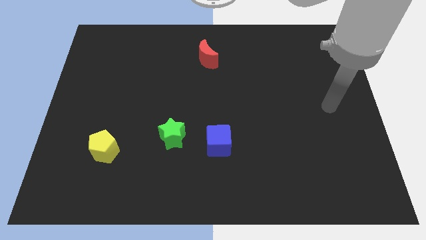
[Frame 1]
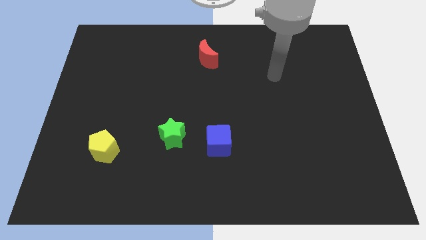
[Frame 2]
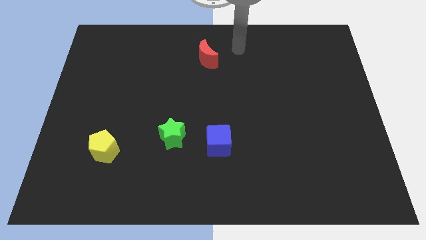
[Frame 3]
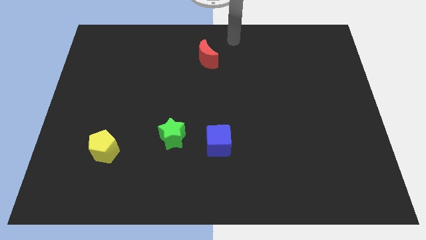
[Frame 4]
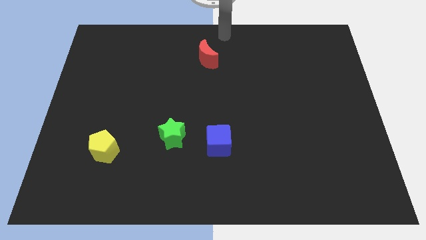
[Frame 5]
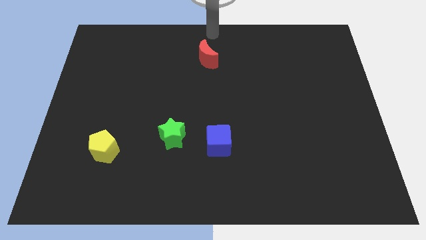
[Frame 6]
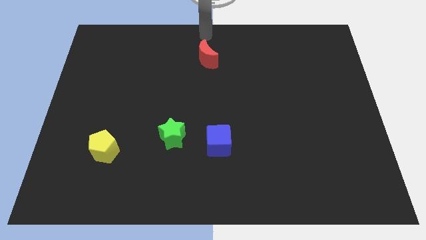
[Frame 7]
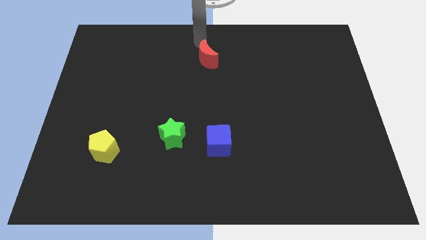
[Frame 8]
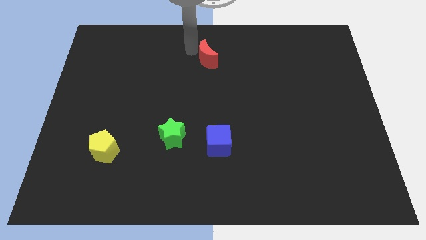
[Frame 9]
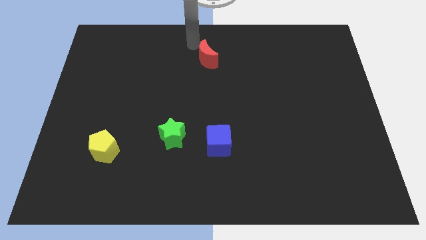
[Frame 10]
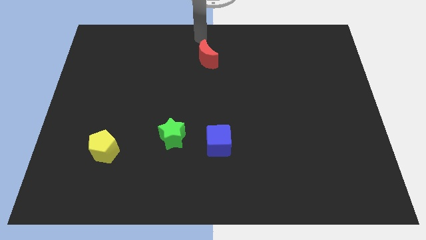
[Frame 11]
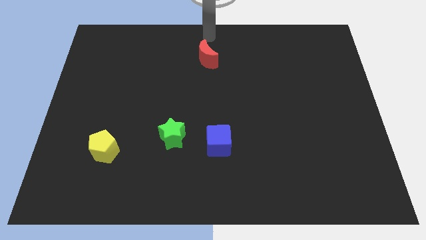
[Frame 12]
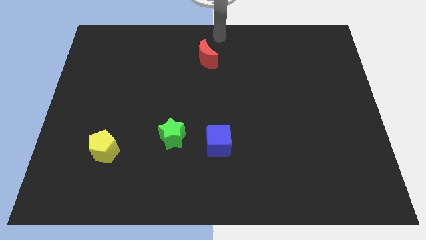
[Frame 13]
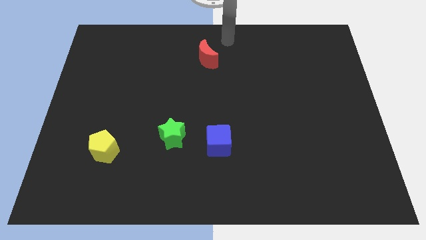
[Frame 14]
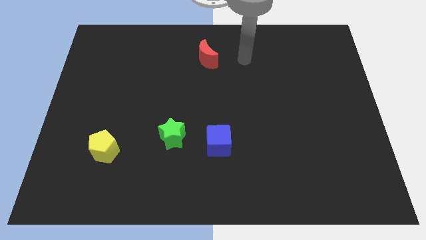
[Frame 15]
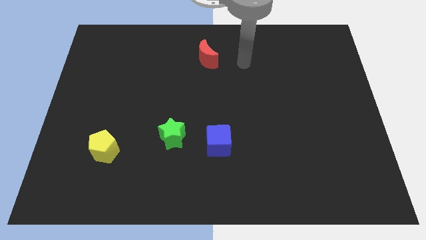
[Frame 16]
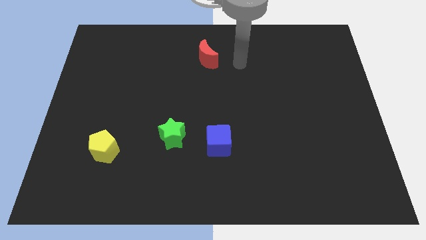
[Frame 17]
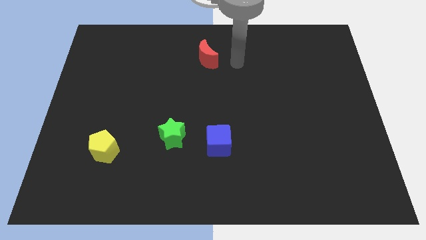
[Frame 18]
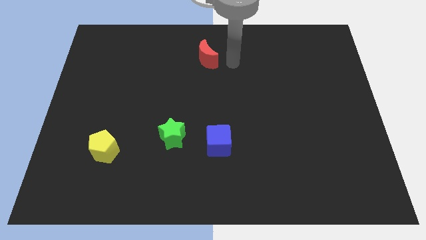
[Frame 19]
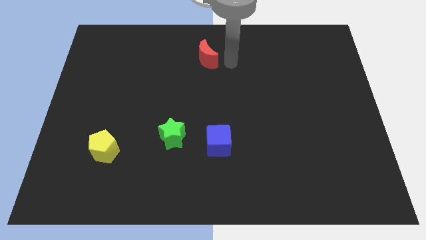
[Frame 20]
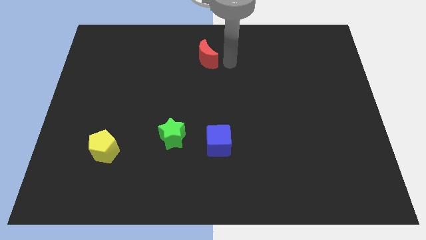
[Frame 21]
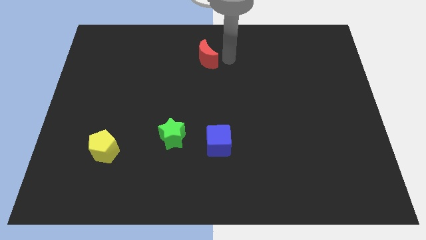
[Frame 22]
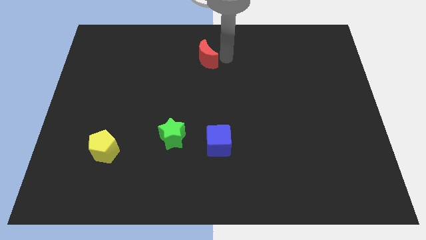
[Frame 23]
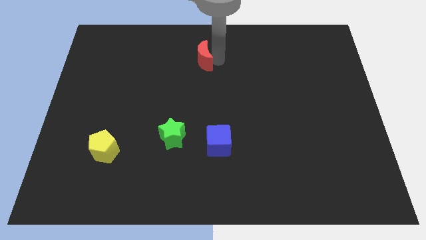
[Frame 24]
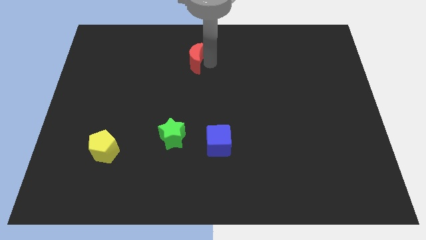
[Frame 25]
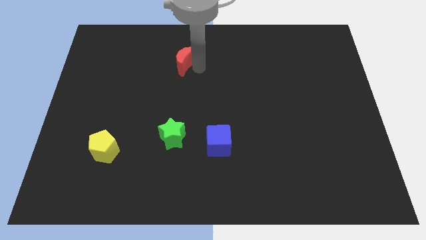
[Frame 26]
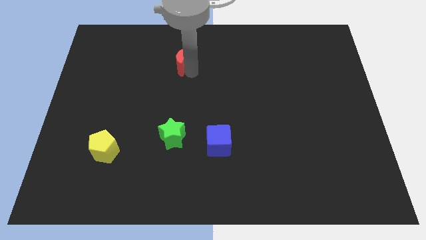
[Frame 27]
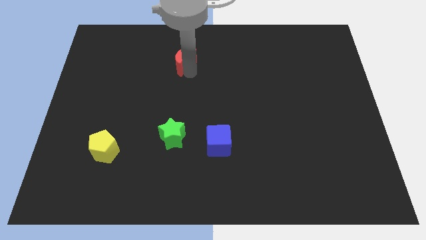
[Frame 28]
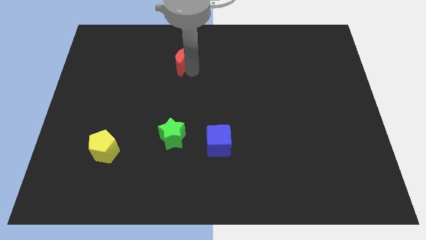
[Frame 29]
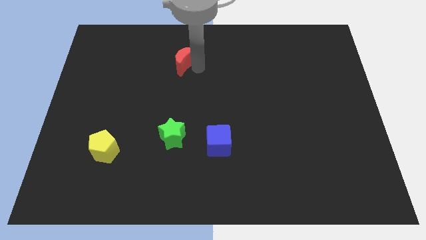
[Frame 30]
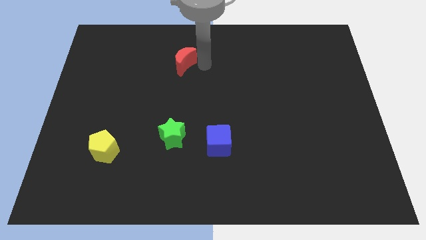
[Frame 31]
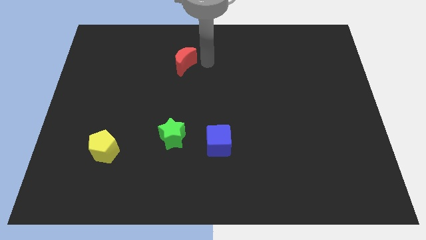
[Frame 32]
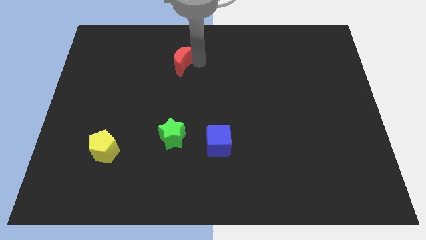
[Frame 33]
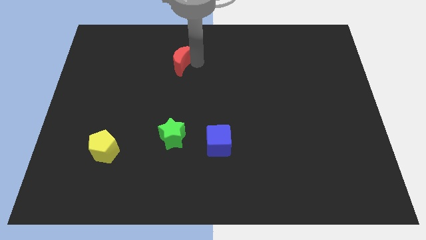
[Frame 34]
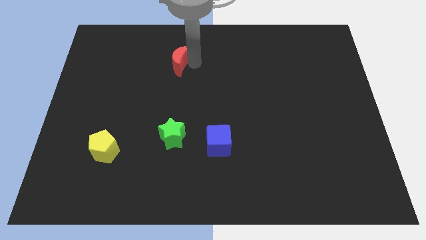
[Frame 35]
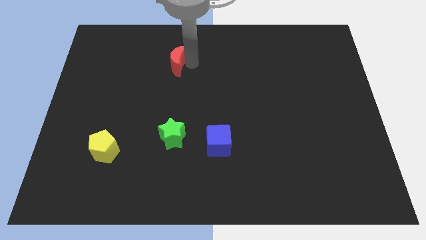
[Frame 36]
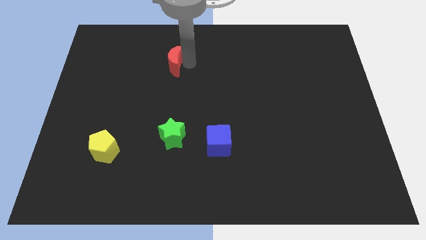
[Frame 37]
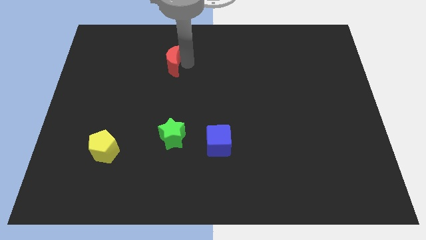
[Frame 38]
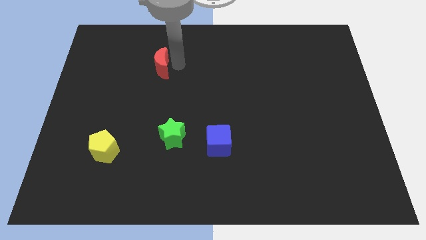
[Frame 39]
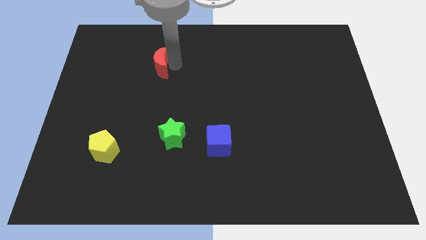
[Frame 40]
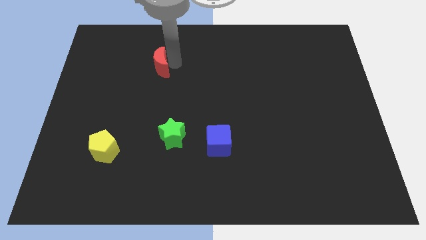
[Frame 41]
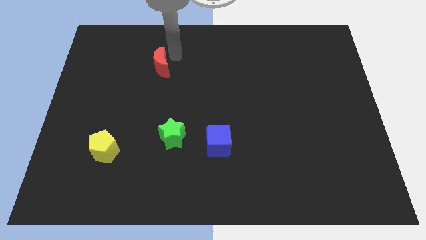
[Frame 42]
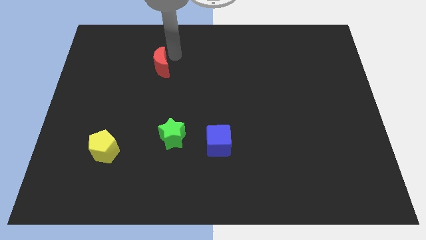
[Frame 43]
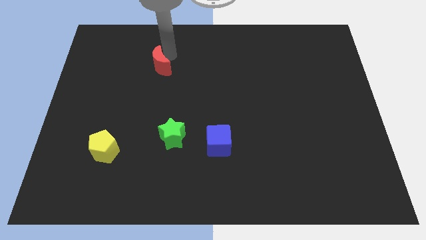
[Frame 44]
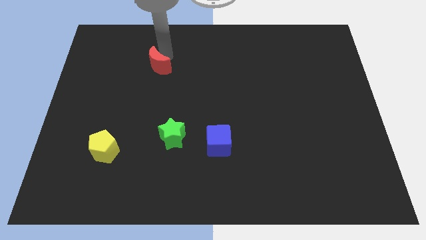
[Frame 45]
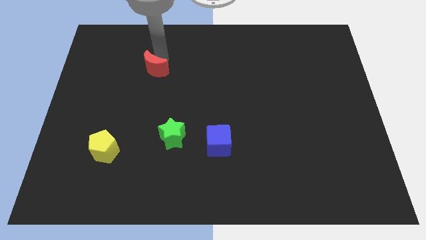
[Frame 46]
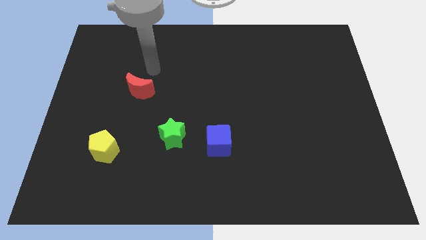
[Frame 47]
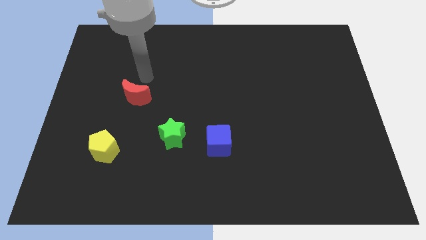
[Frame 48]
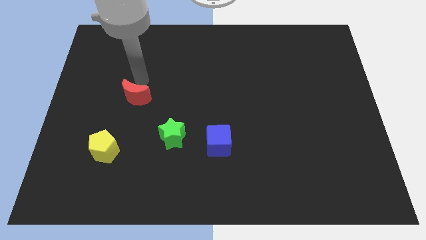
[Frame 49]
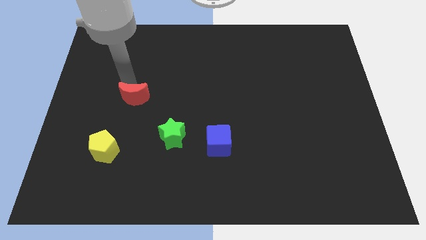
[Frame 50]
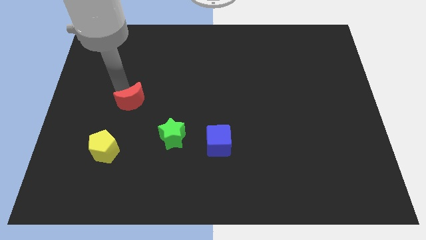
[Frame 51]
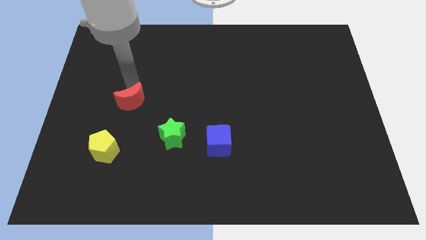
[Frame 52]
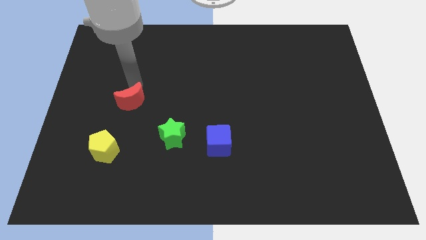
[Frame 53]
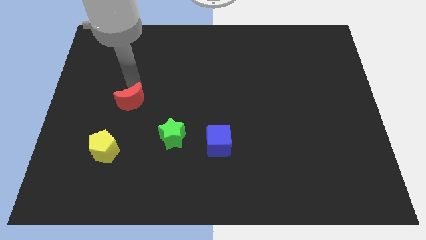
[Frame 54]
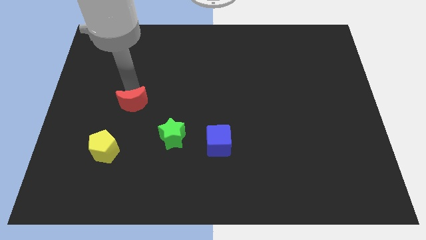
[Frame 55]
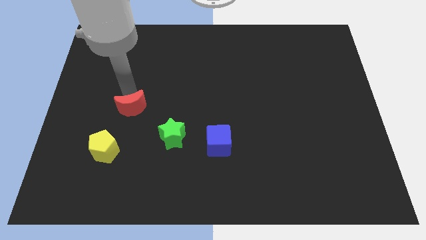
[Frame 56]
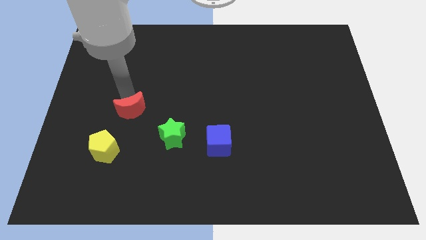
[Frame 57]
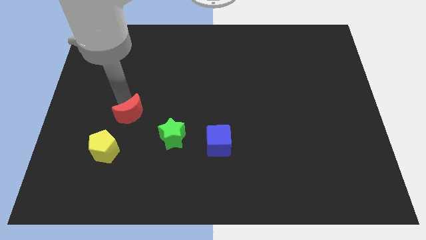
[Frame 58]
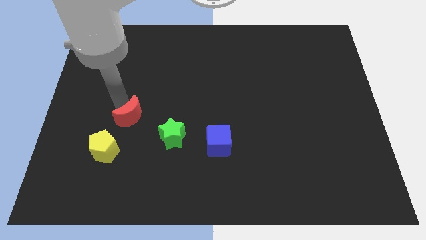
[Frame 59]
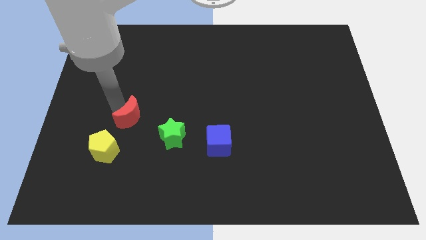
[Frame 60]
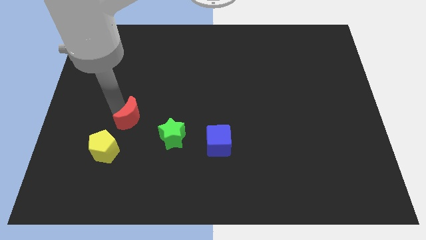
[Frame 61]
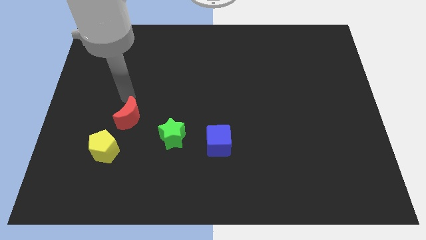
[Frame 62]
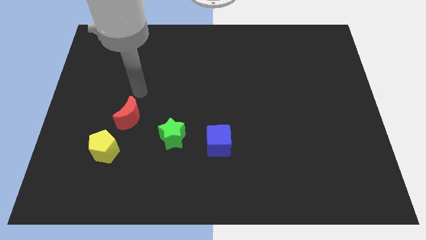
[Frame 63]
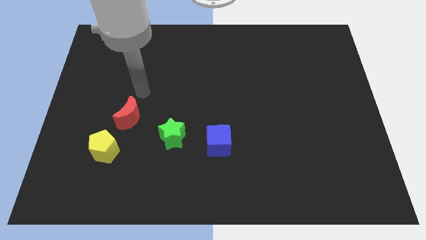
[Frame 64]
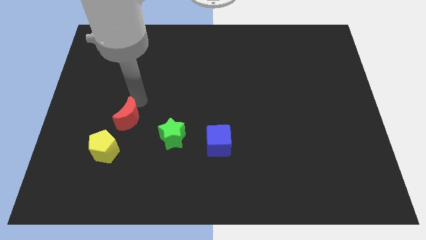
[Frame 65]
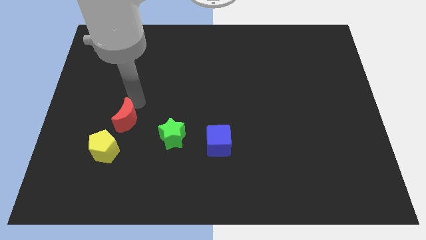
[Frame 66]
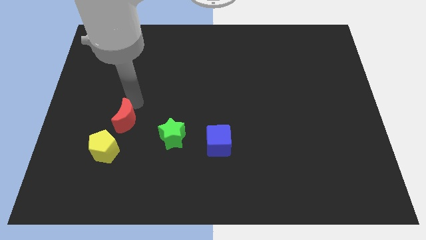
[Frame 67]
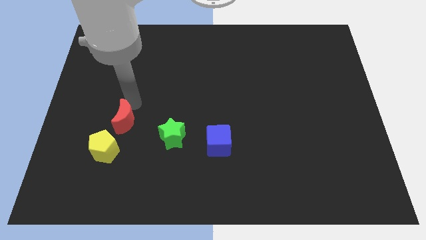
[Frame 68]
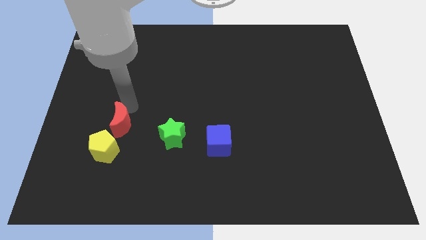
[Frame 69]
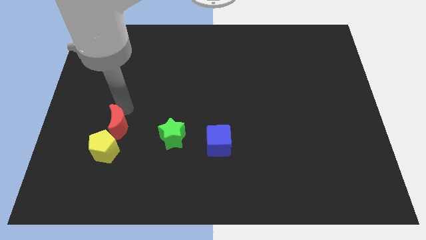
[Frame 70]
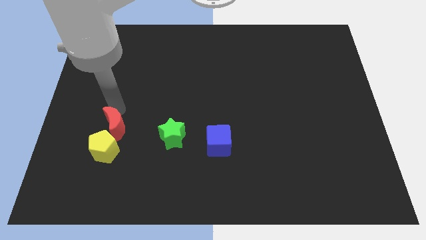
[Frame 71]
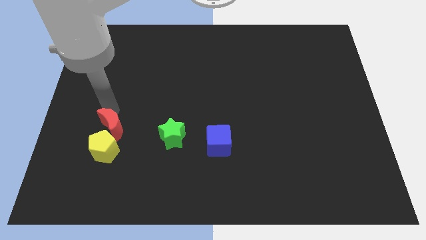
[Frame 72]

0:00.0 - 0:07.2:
move the red block next to the pentagon

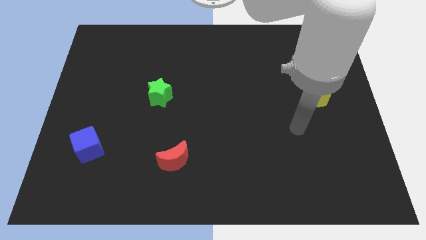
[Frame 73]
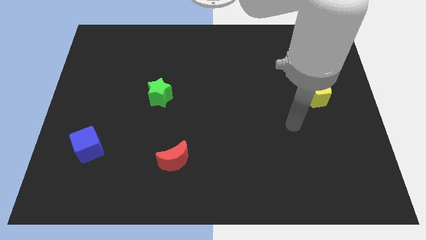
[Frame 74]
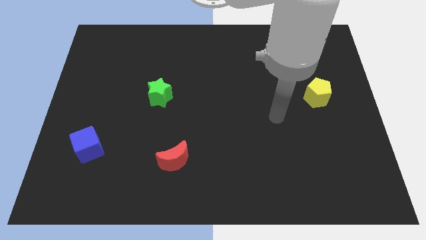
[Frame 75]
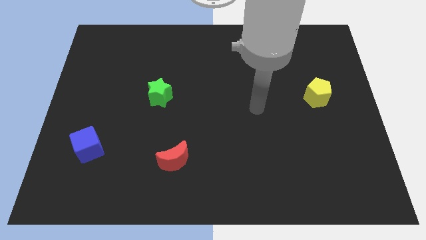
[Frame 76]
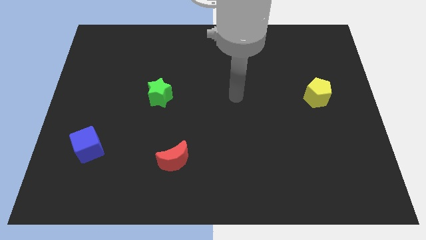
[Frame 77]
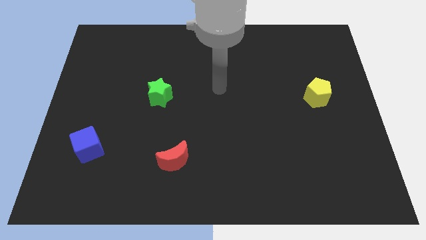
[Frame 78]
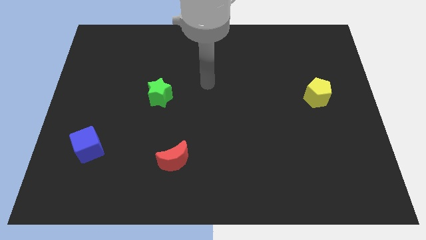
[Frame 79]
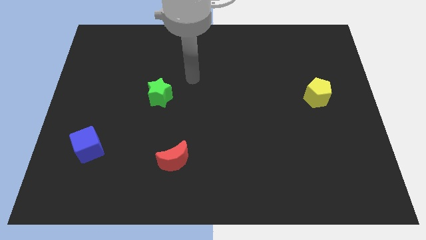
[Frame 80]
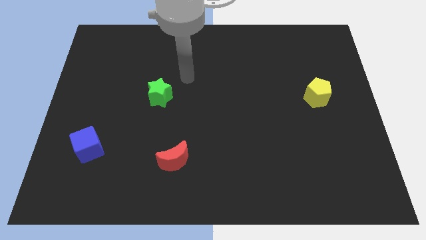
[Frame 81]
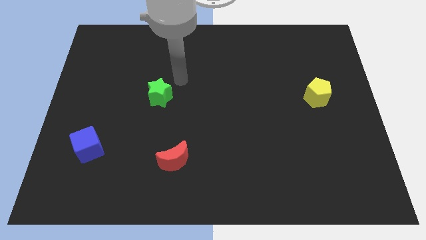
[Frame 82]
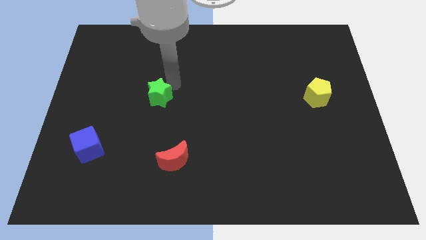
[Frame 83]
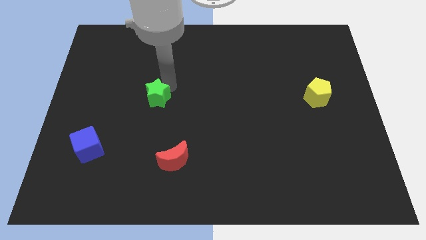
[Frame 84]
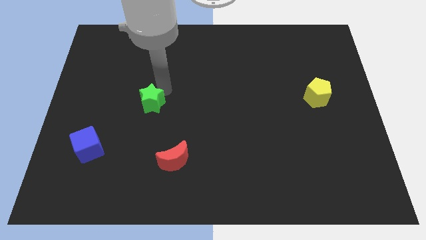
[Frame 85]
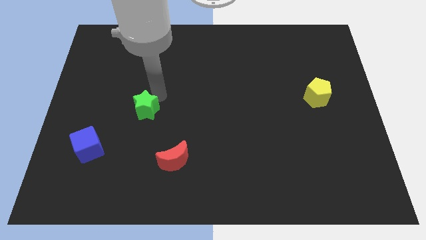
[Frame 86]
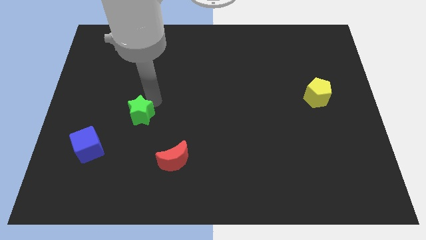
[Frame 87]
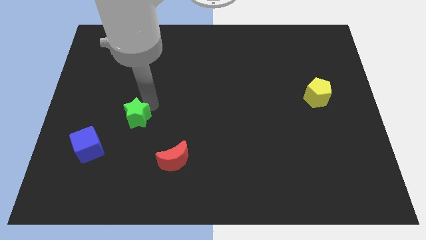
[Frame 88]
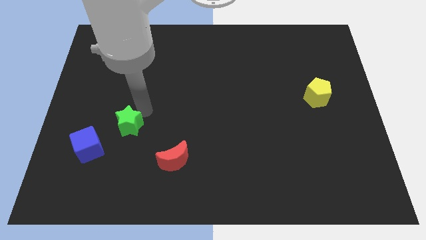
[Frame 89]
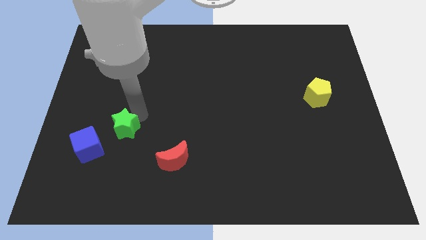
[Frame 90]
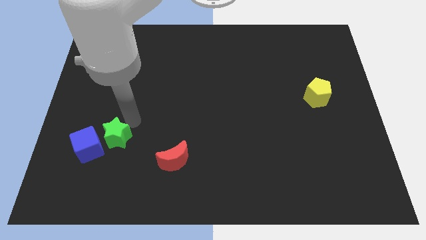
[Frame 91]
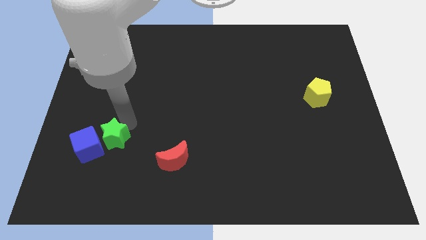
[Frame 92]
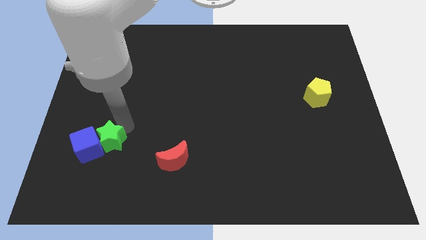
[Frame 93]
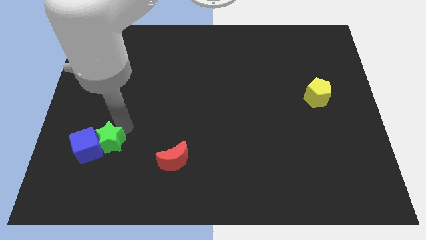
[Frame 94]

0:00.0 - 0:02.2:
push the green star towards the blue cube
